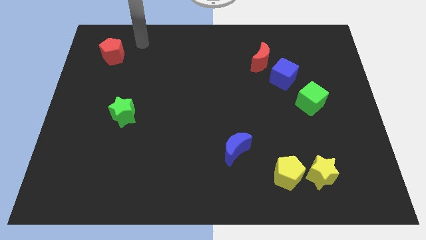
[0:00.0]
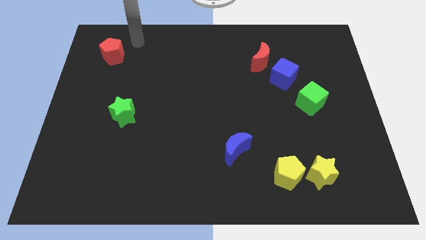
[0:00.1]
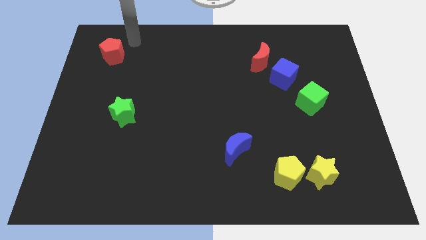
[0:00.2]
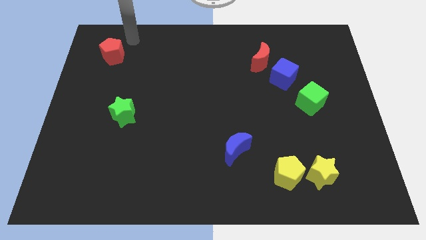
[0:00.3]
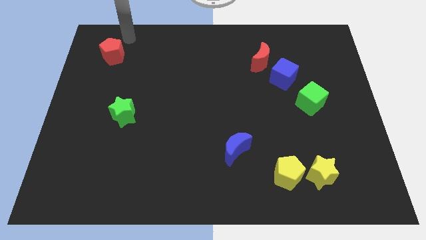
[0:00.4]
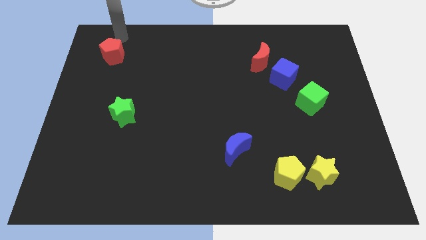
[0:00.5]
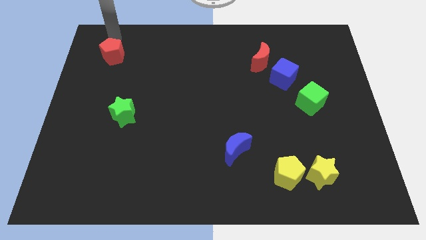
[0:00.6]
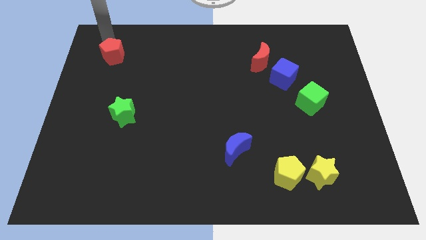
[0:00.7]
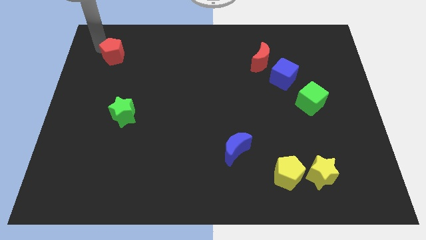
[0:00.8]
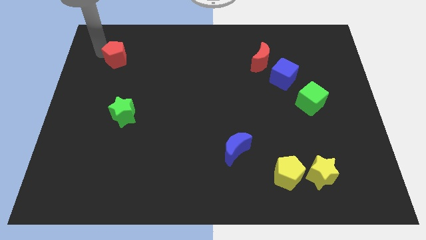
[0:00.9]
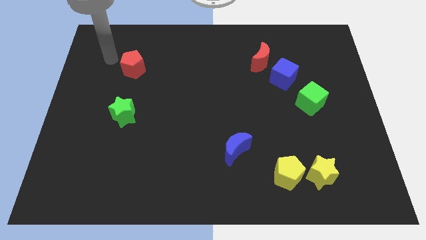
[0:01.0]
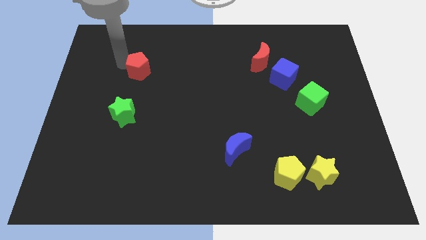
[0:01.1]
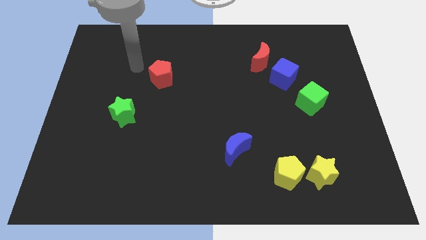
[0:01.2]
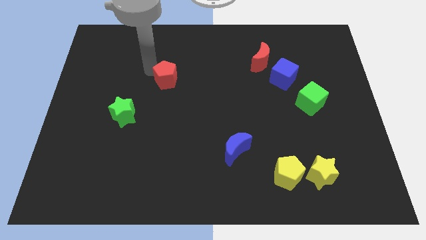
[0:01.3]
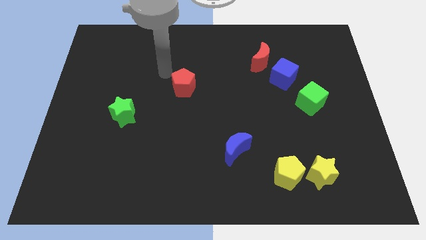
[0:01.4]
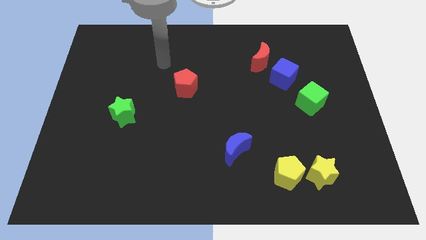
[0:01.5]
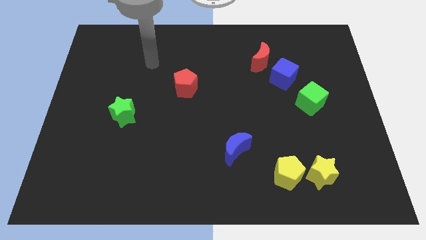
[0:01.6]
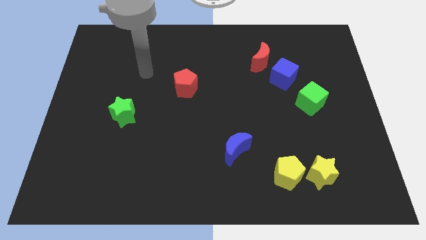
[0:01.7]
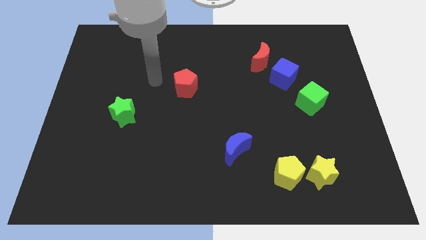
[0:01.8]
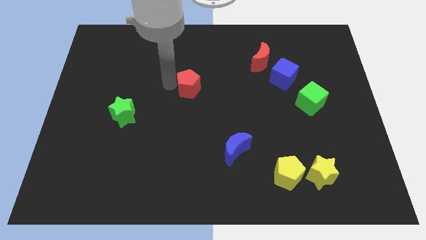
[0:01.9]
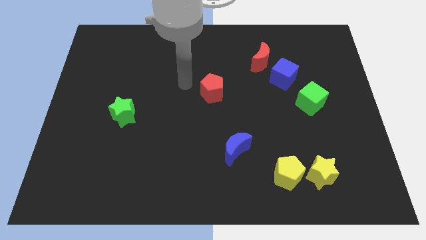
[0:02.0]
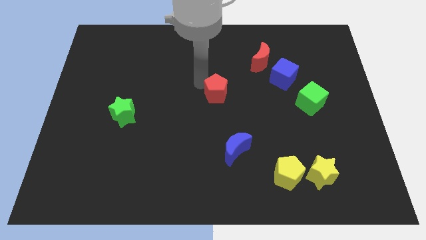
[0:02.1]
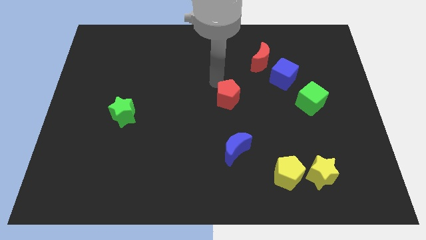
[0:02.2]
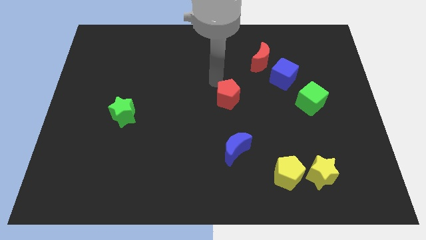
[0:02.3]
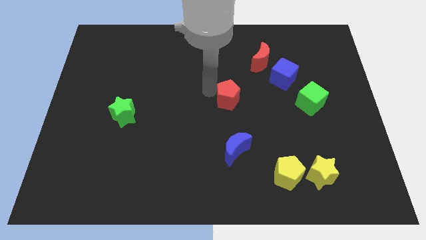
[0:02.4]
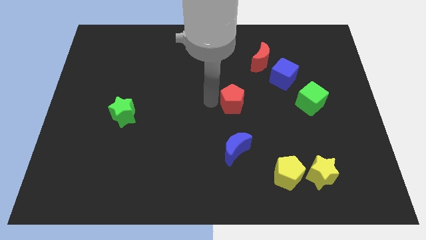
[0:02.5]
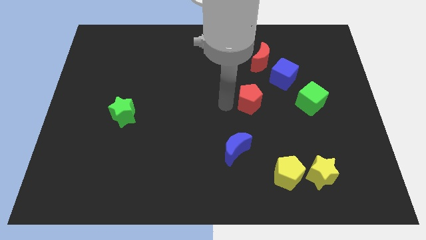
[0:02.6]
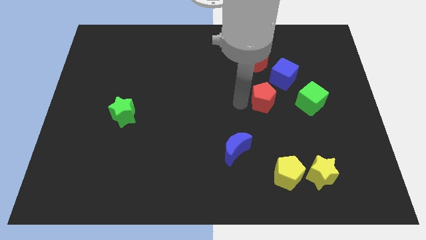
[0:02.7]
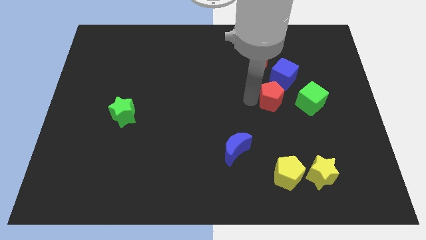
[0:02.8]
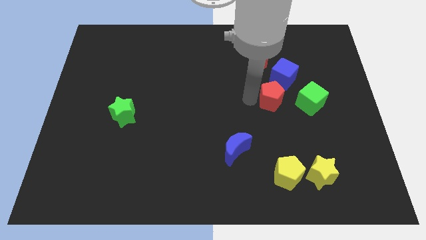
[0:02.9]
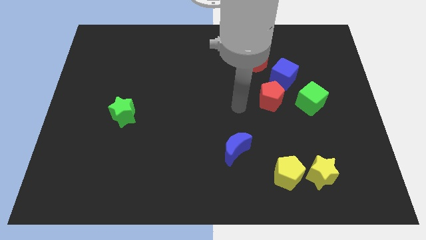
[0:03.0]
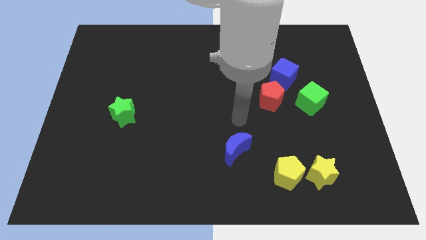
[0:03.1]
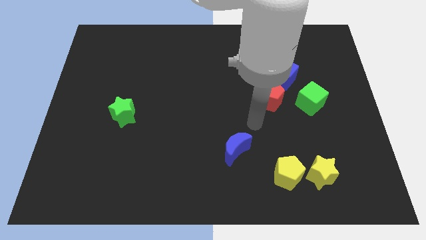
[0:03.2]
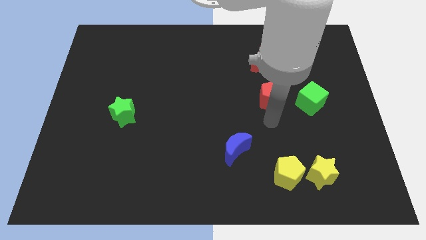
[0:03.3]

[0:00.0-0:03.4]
move the red pentagon close to the blue cube

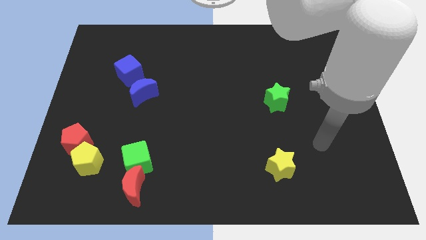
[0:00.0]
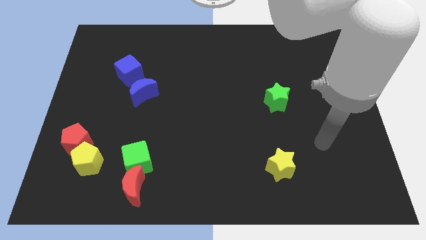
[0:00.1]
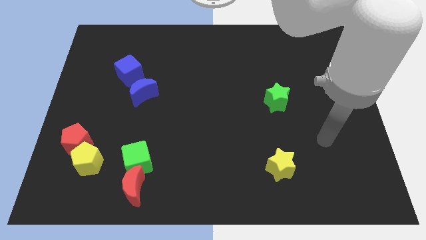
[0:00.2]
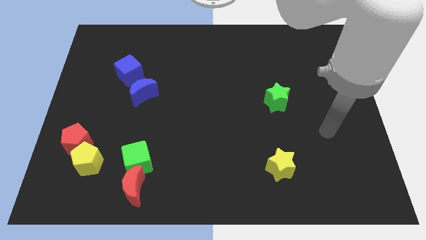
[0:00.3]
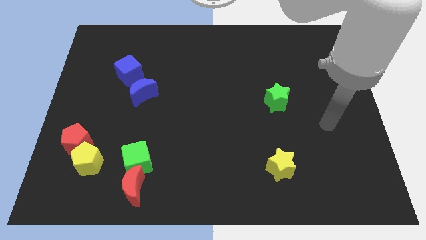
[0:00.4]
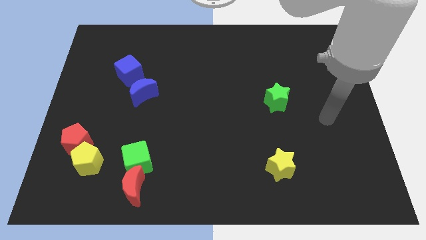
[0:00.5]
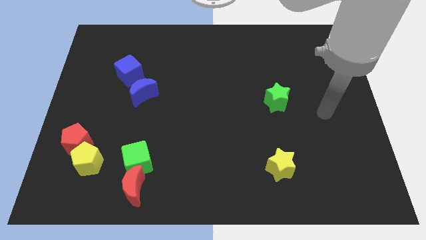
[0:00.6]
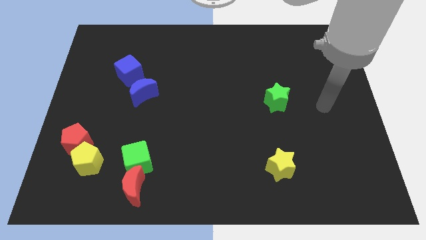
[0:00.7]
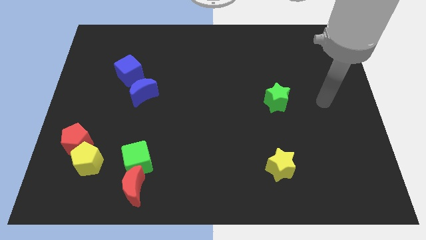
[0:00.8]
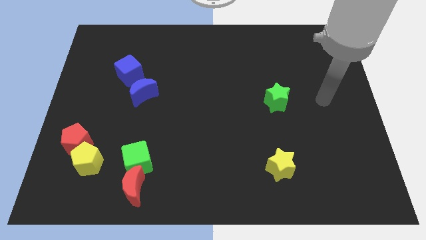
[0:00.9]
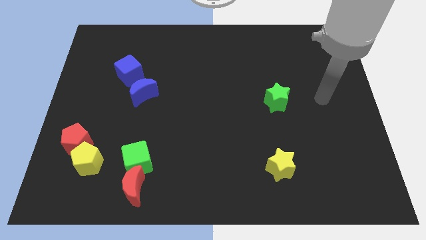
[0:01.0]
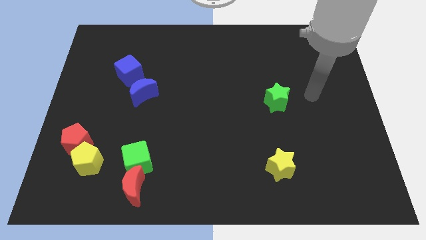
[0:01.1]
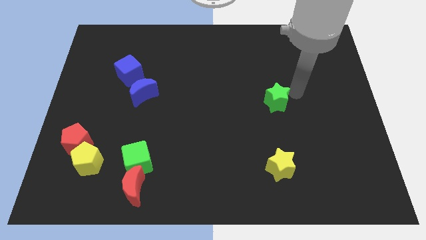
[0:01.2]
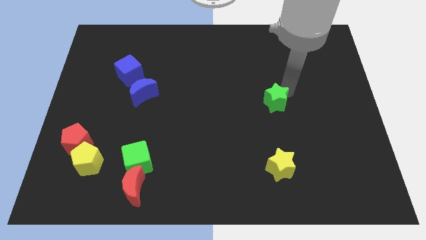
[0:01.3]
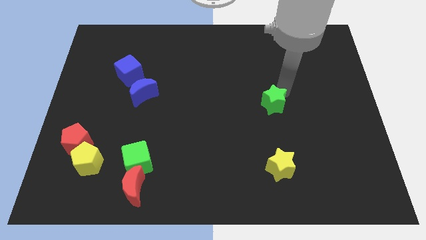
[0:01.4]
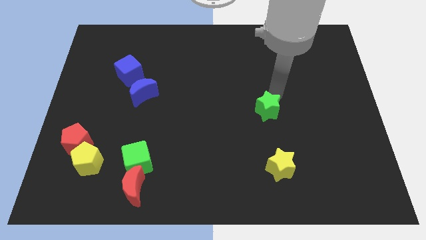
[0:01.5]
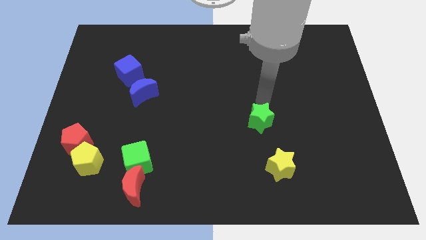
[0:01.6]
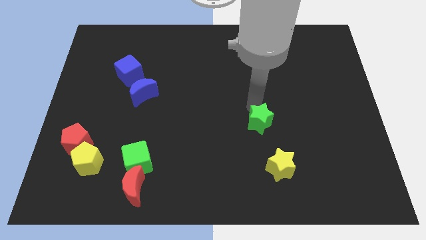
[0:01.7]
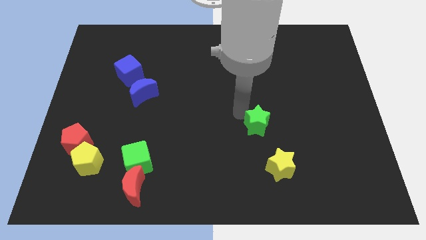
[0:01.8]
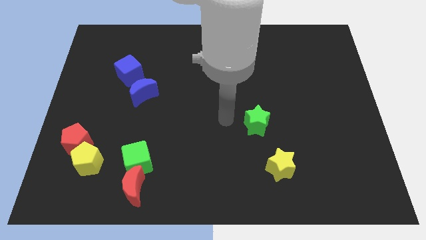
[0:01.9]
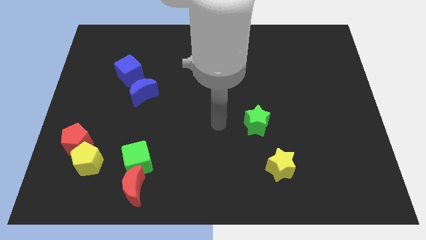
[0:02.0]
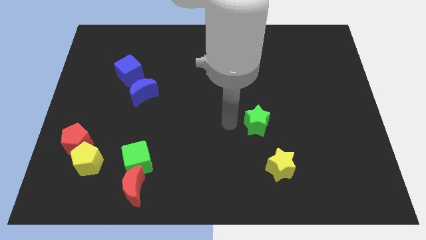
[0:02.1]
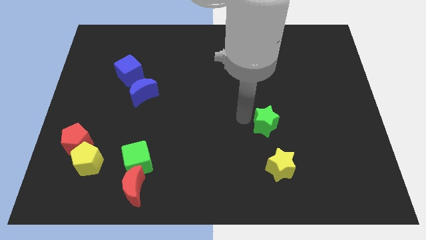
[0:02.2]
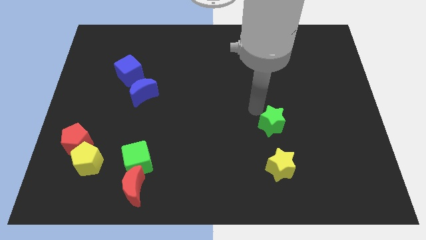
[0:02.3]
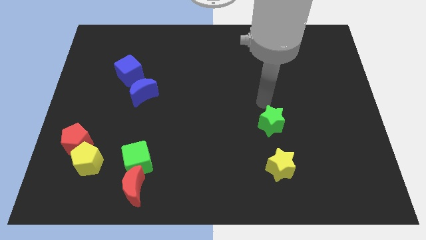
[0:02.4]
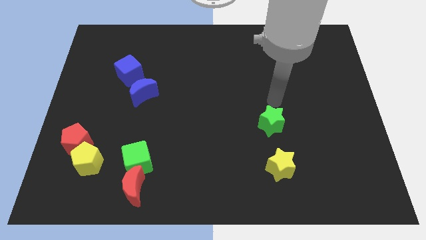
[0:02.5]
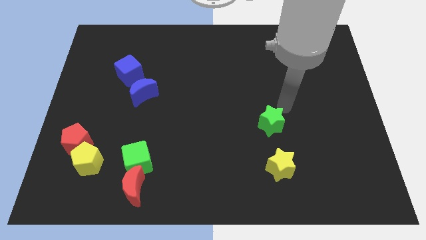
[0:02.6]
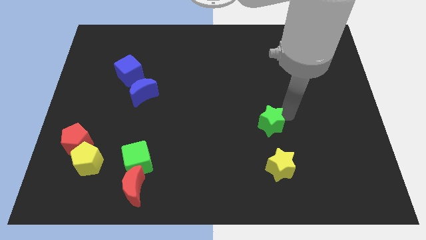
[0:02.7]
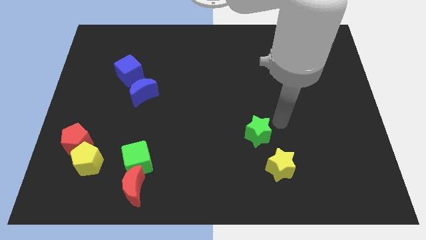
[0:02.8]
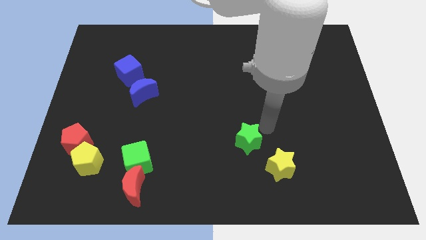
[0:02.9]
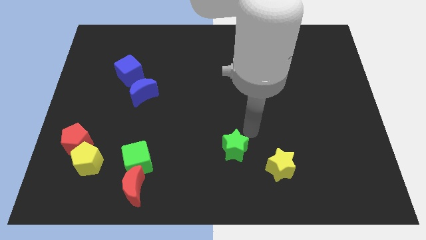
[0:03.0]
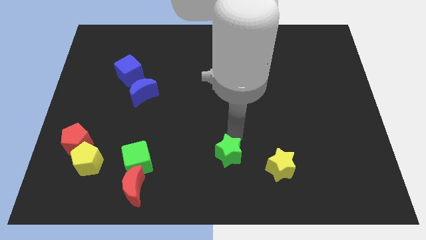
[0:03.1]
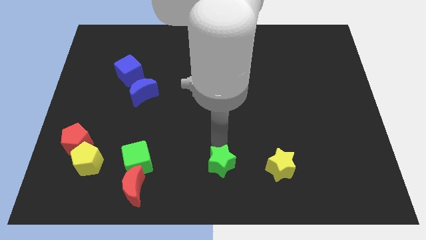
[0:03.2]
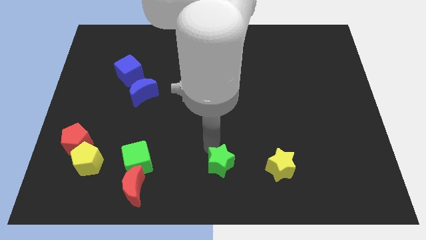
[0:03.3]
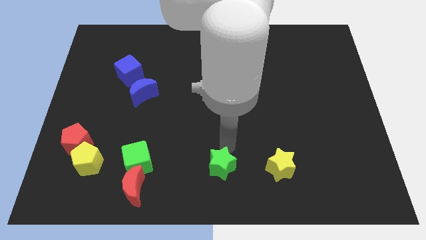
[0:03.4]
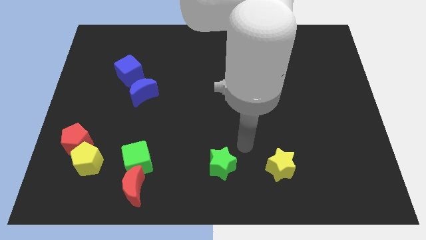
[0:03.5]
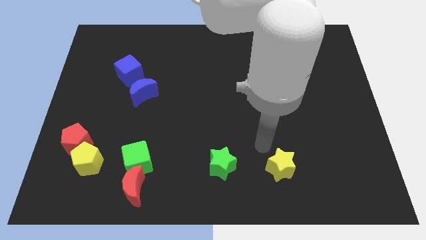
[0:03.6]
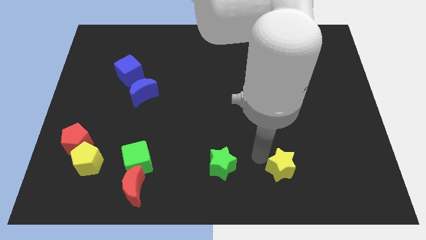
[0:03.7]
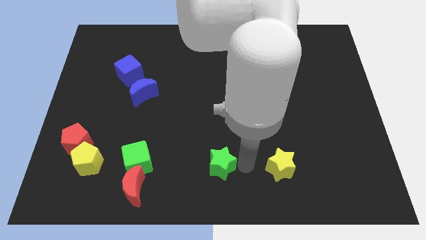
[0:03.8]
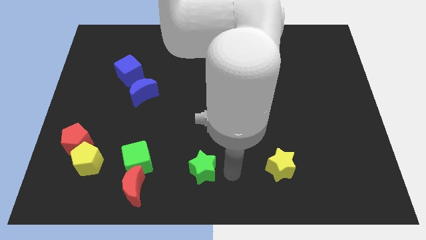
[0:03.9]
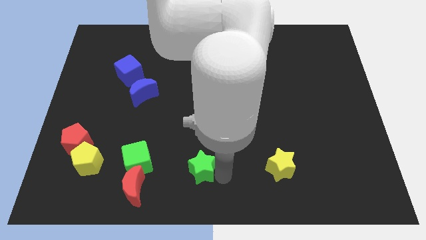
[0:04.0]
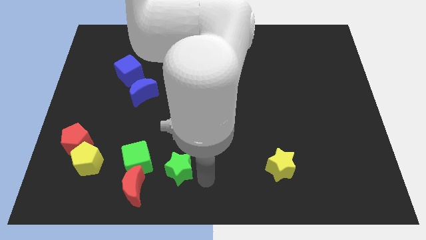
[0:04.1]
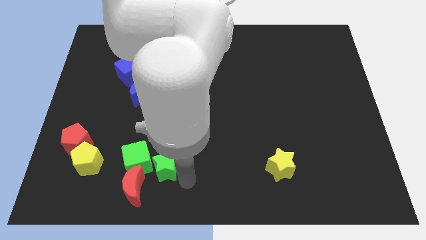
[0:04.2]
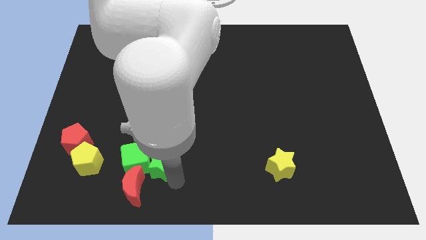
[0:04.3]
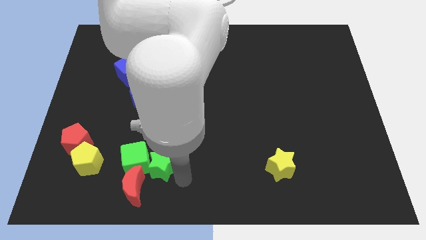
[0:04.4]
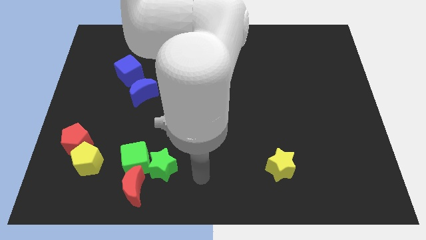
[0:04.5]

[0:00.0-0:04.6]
move the green star into the green cube

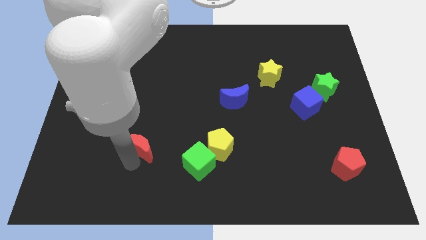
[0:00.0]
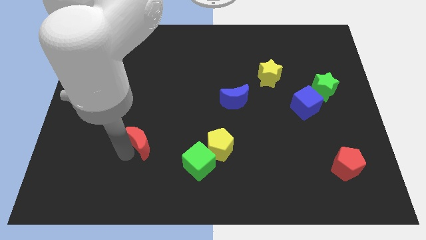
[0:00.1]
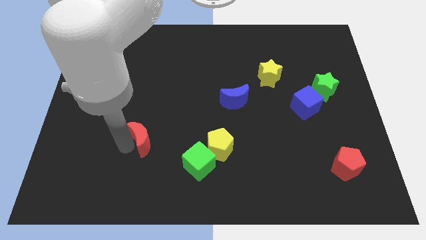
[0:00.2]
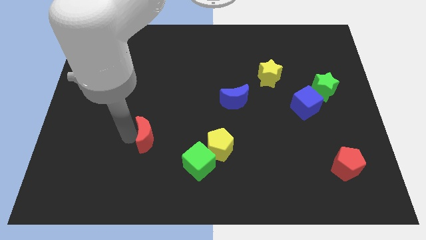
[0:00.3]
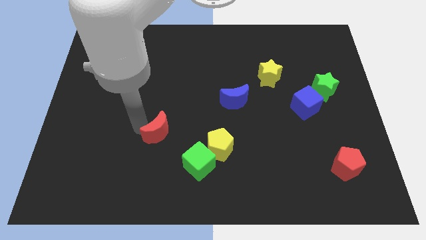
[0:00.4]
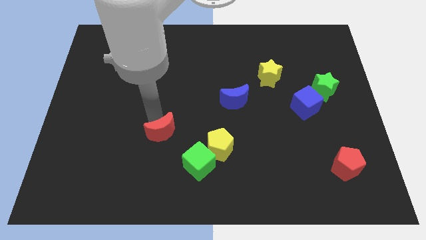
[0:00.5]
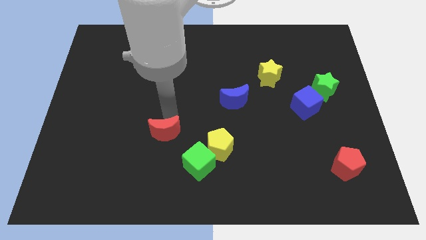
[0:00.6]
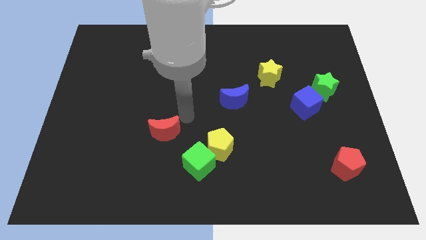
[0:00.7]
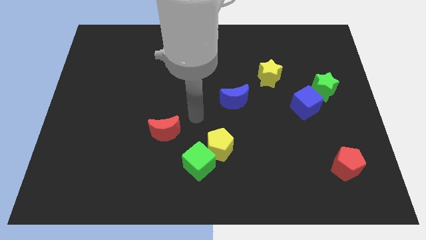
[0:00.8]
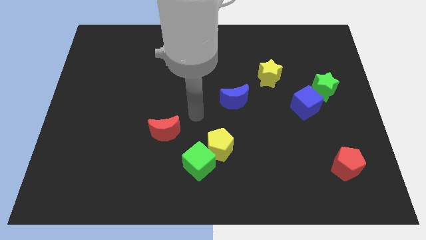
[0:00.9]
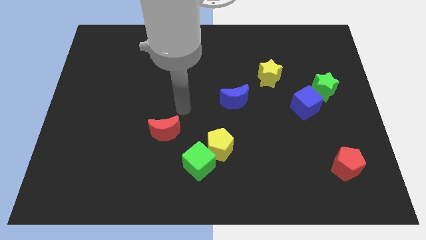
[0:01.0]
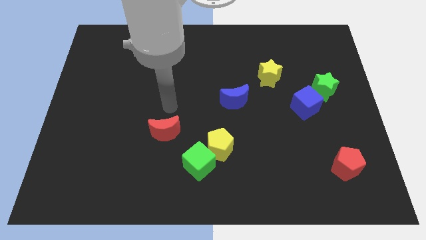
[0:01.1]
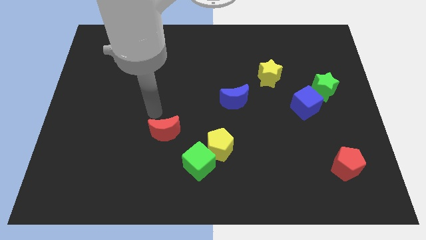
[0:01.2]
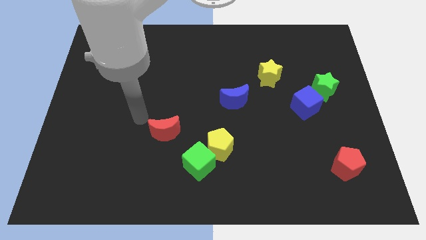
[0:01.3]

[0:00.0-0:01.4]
move the red moon towards the center of board
